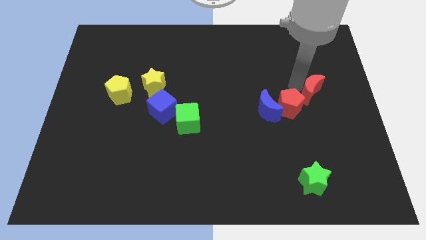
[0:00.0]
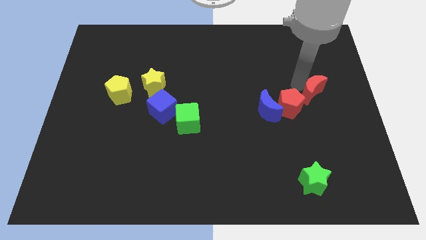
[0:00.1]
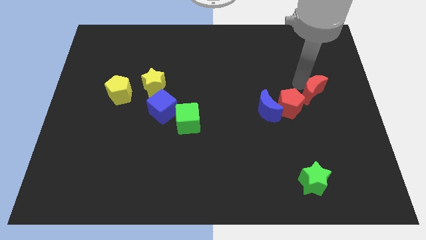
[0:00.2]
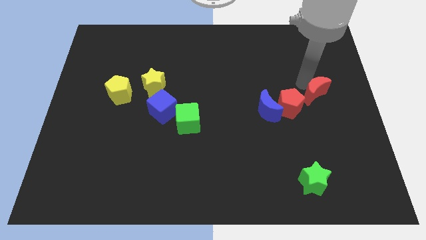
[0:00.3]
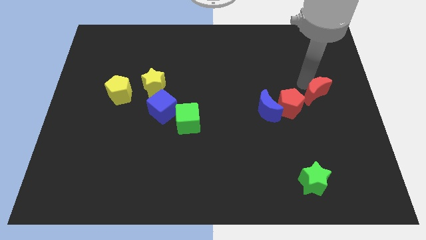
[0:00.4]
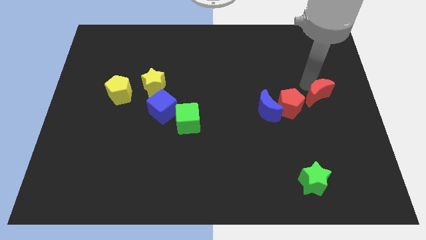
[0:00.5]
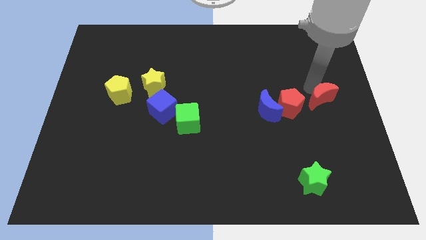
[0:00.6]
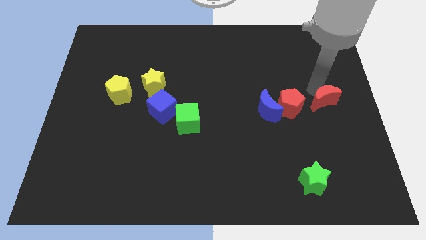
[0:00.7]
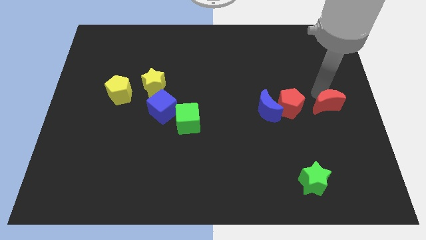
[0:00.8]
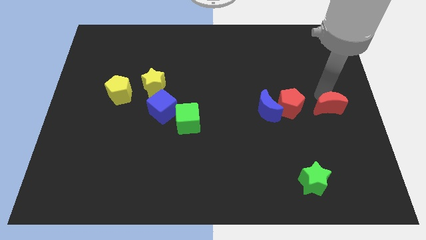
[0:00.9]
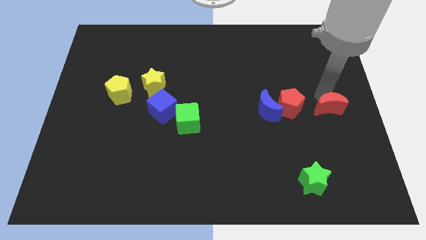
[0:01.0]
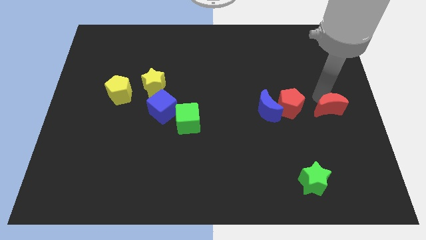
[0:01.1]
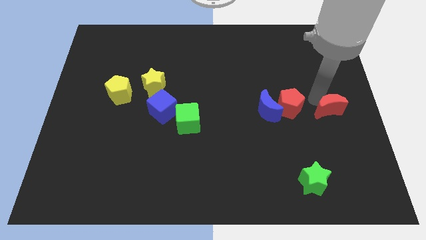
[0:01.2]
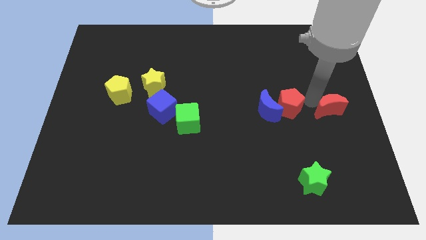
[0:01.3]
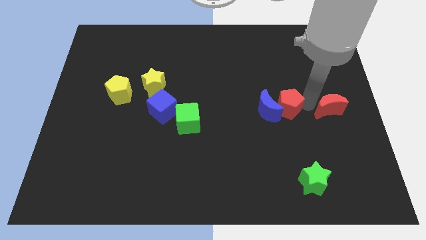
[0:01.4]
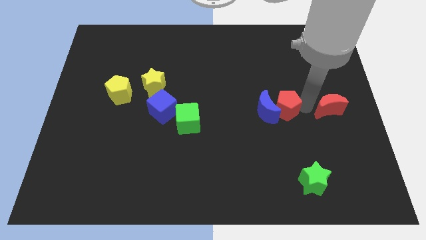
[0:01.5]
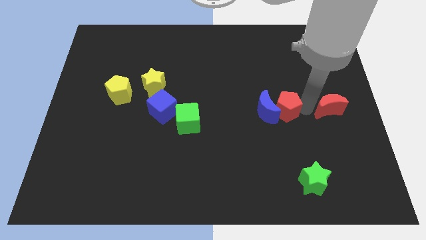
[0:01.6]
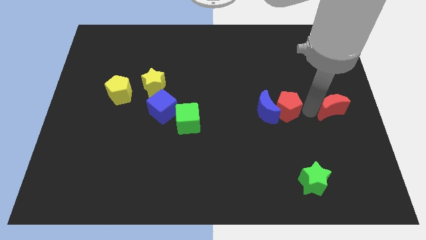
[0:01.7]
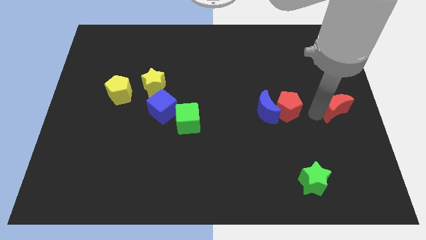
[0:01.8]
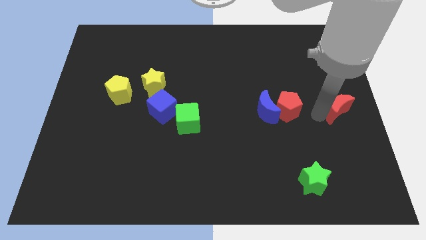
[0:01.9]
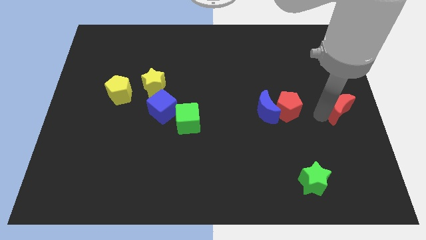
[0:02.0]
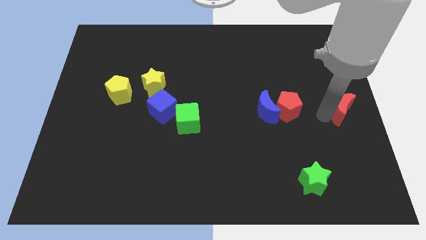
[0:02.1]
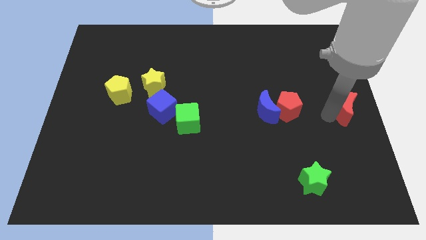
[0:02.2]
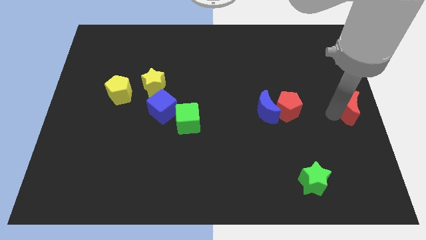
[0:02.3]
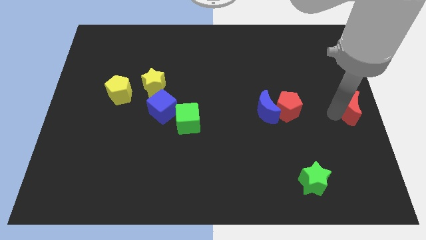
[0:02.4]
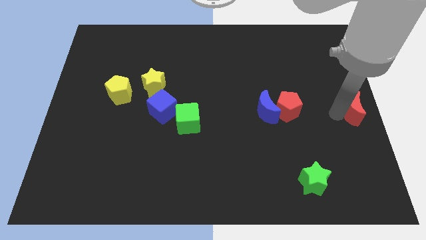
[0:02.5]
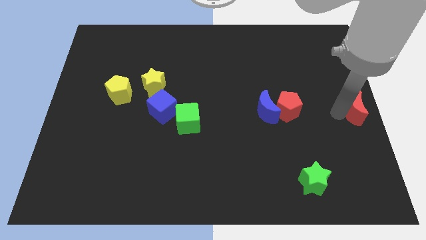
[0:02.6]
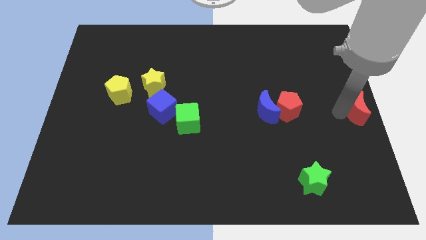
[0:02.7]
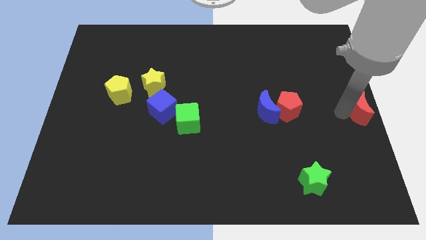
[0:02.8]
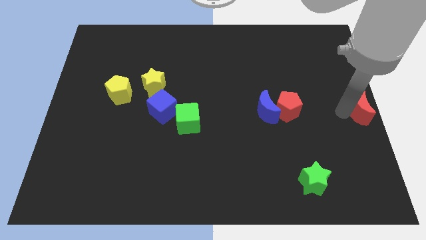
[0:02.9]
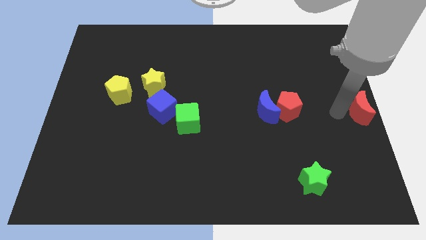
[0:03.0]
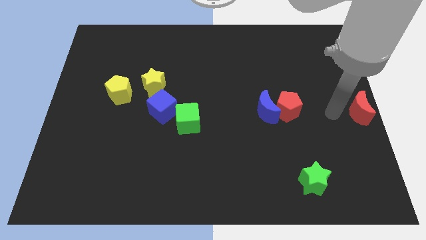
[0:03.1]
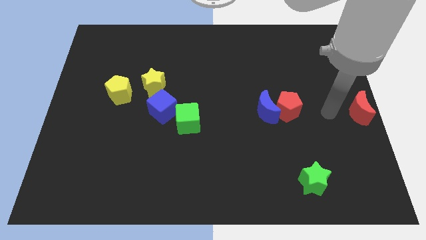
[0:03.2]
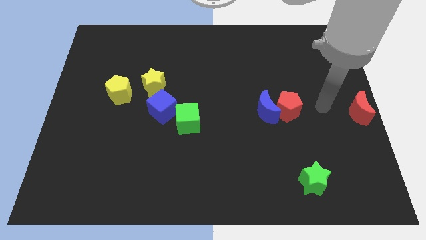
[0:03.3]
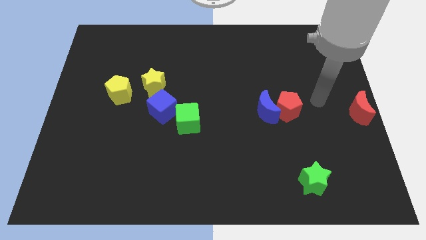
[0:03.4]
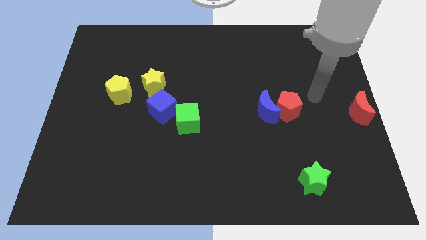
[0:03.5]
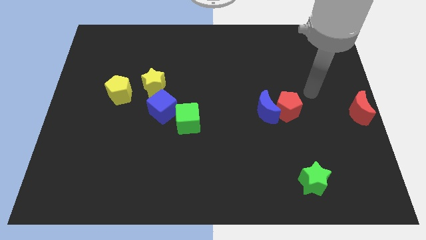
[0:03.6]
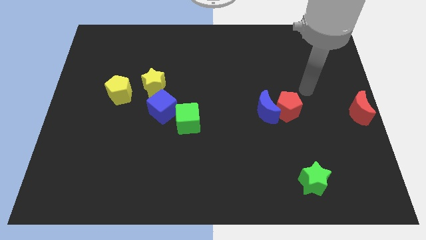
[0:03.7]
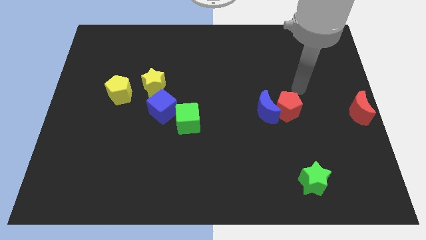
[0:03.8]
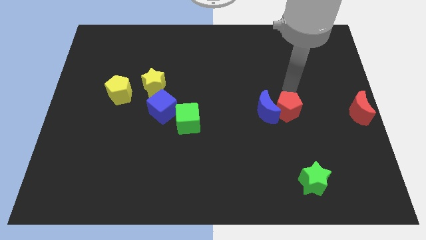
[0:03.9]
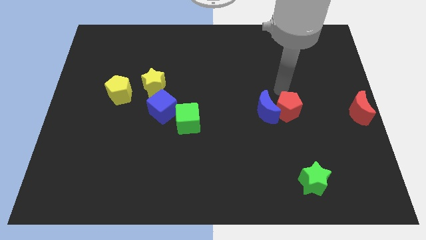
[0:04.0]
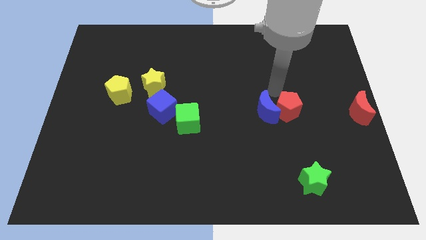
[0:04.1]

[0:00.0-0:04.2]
place the red crescent near the right middle corner of board

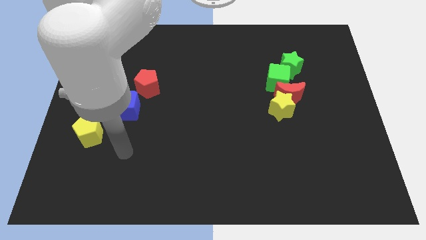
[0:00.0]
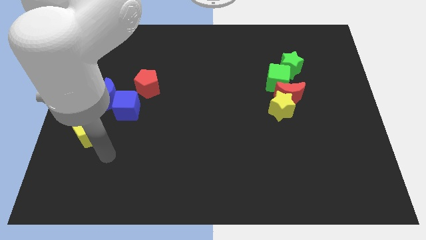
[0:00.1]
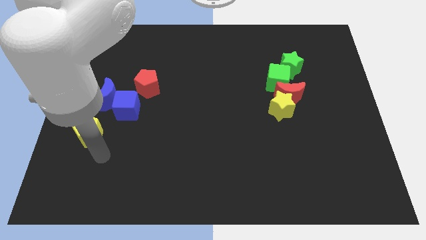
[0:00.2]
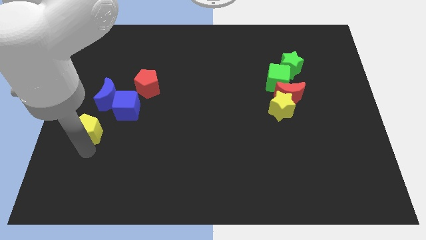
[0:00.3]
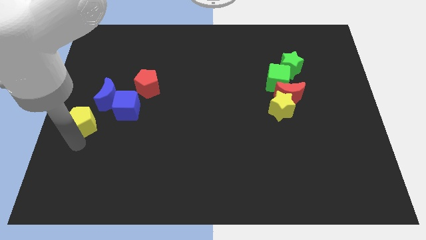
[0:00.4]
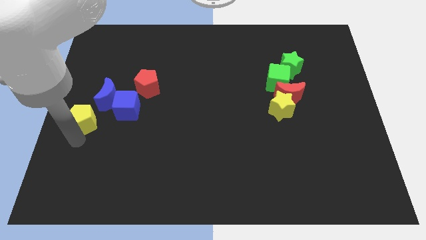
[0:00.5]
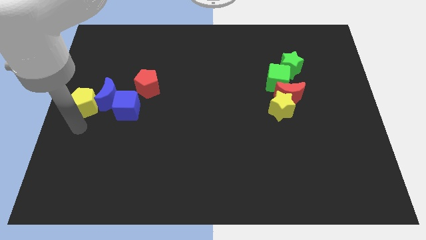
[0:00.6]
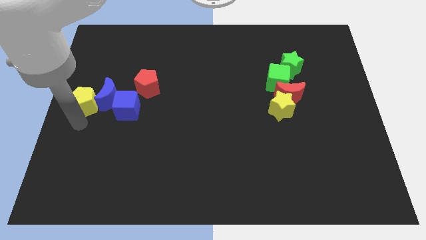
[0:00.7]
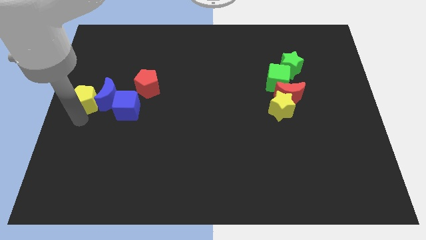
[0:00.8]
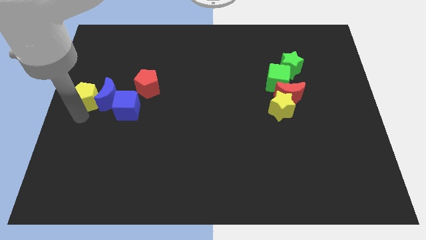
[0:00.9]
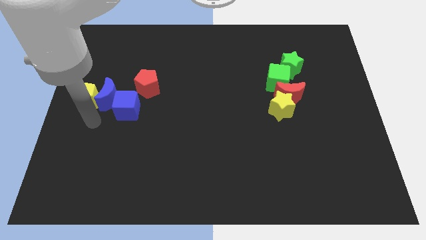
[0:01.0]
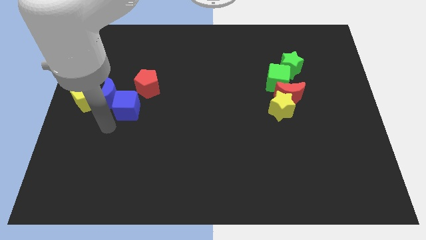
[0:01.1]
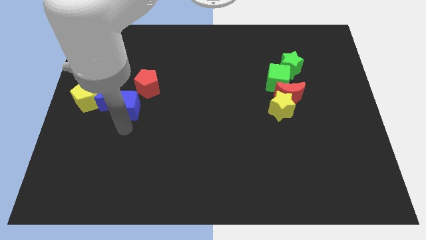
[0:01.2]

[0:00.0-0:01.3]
place the yellow pentagon close left to the blue crescent

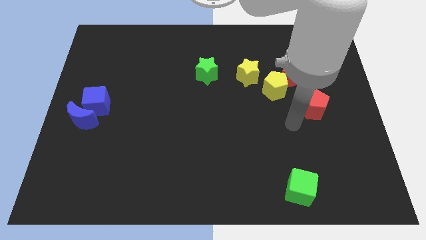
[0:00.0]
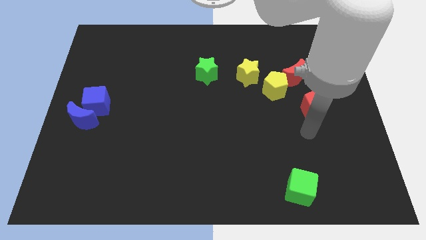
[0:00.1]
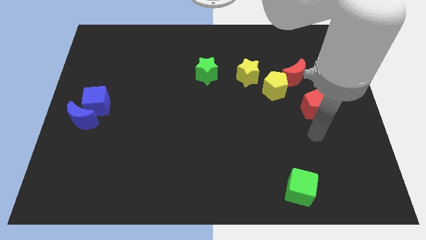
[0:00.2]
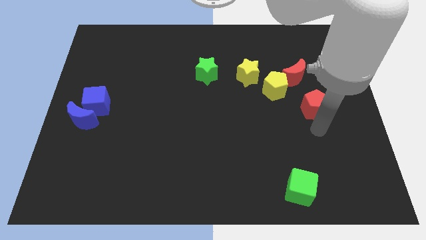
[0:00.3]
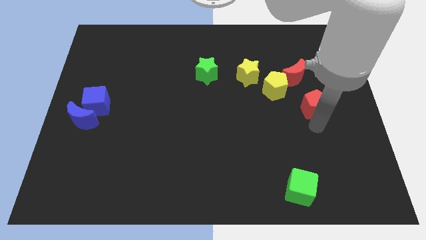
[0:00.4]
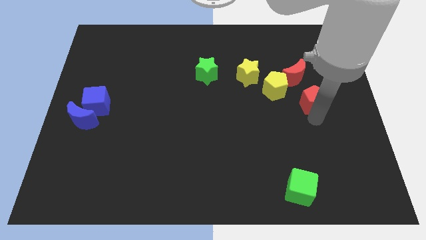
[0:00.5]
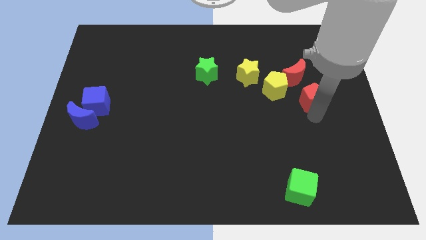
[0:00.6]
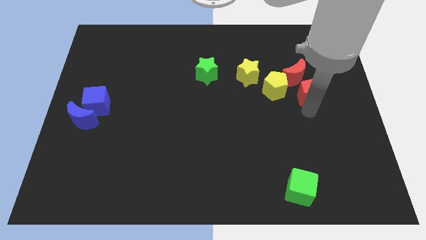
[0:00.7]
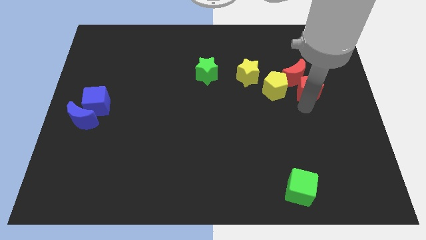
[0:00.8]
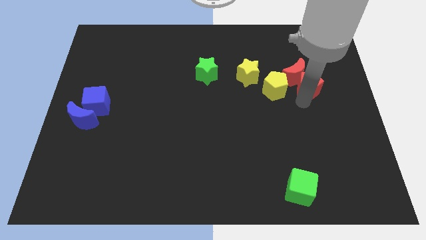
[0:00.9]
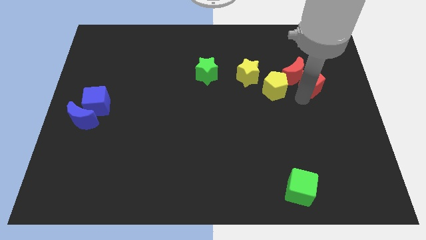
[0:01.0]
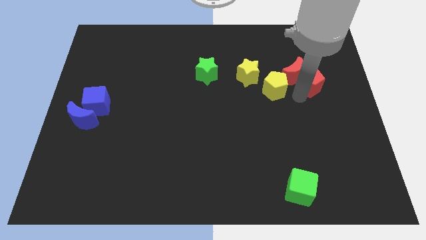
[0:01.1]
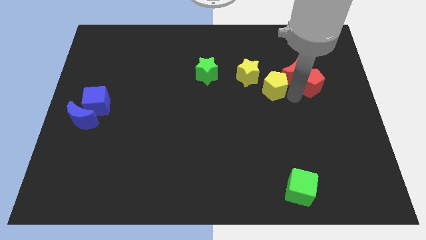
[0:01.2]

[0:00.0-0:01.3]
move the red pentagon right to the yellow pentagon

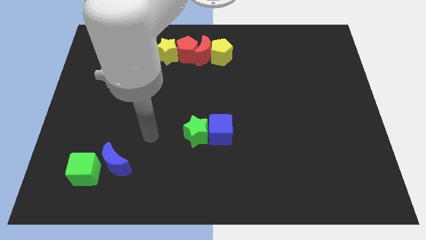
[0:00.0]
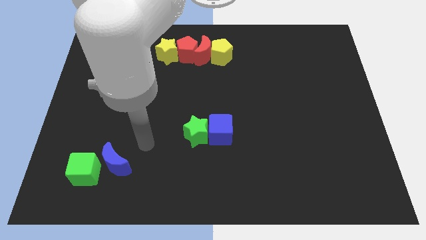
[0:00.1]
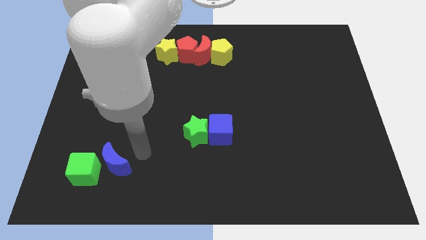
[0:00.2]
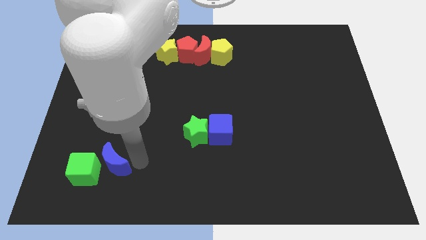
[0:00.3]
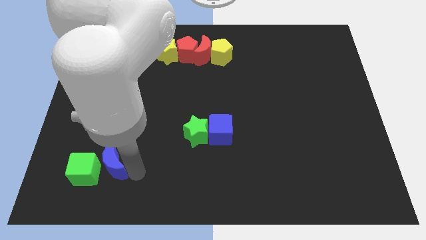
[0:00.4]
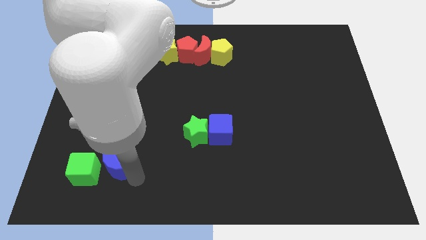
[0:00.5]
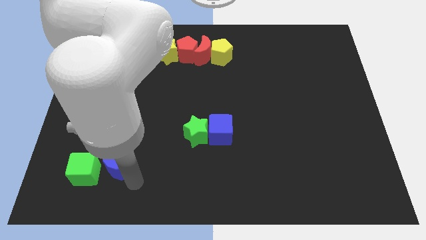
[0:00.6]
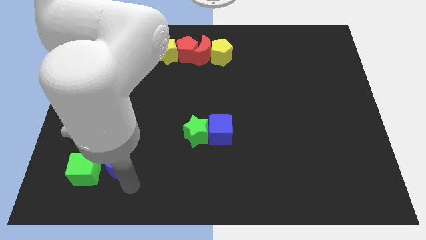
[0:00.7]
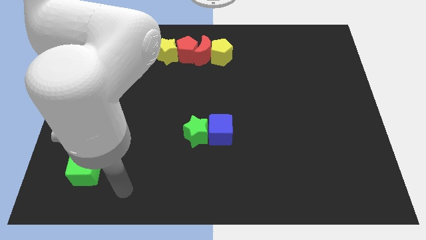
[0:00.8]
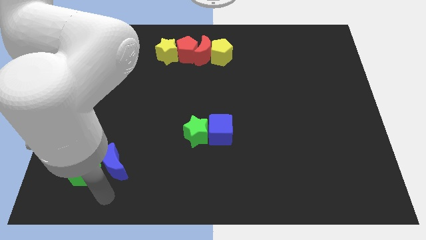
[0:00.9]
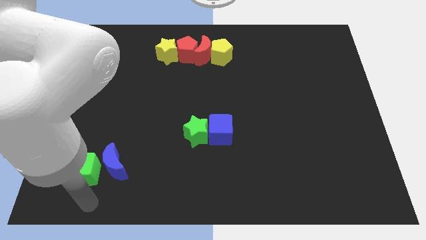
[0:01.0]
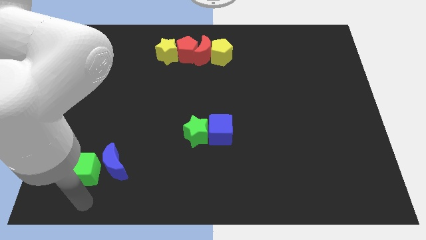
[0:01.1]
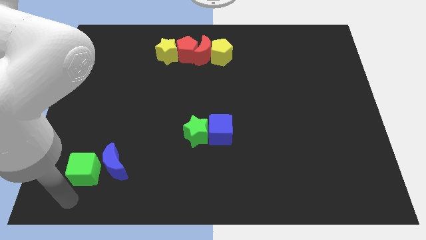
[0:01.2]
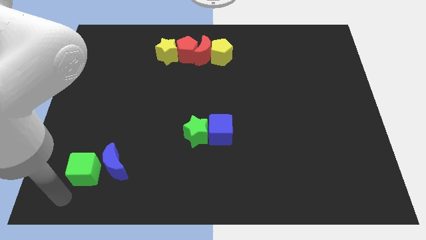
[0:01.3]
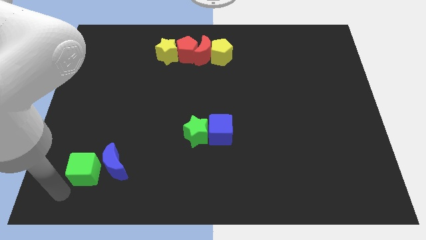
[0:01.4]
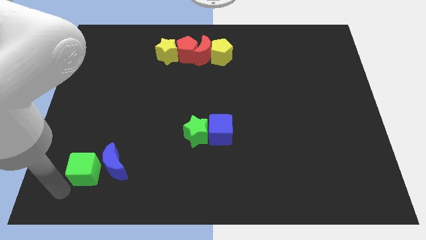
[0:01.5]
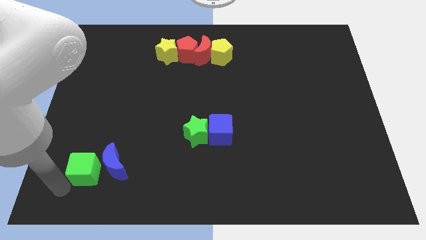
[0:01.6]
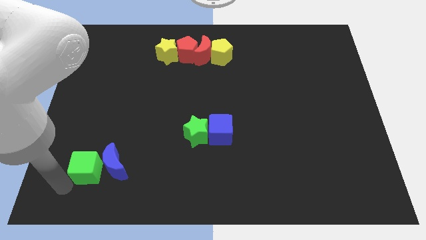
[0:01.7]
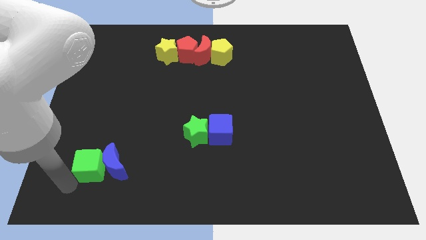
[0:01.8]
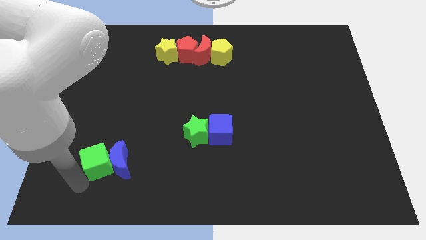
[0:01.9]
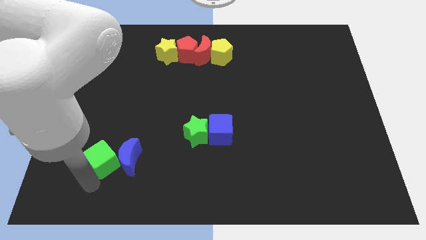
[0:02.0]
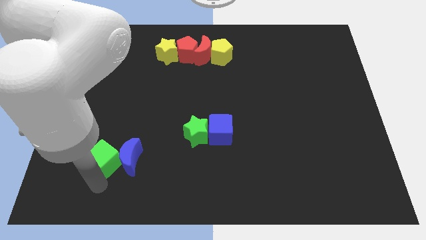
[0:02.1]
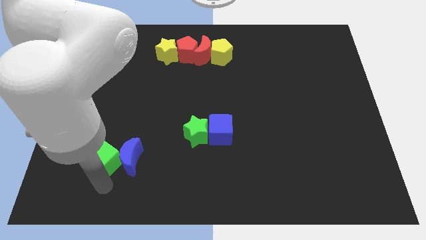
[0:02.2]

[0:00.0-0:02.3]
slightly push the green cube into the blue half moon
